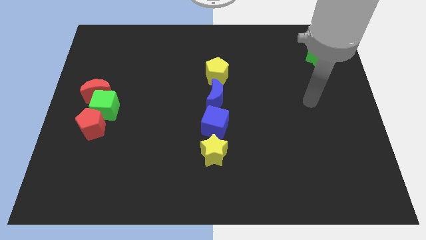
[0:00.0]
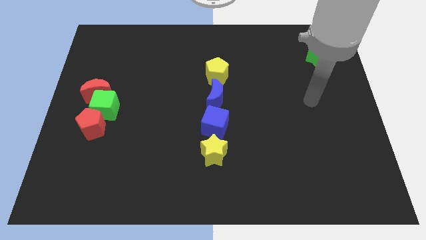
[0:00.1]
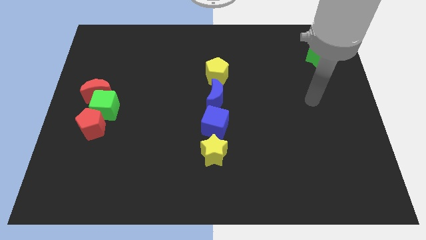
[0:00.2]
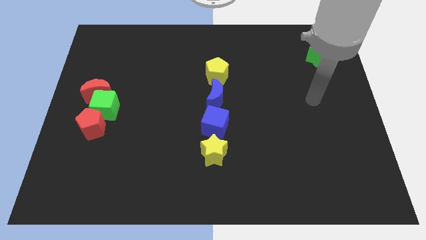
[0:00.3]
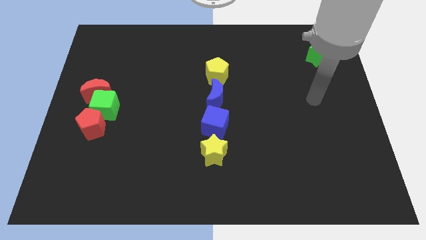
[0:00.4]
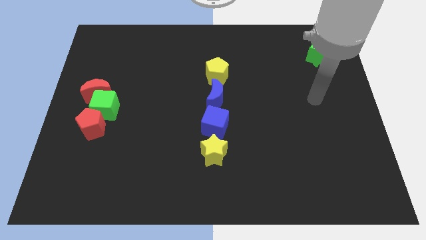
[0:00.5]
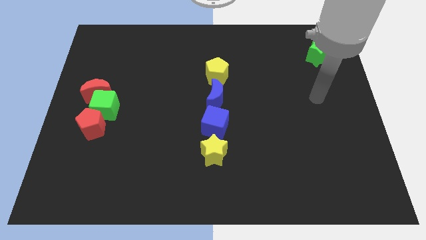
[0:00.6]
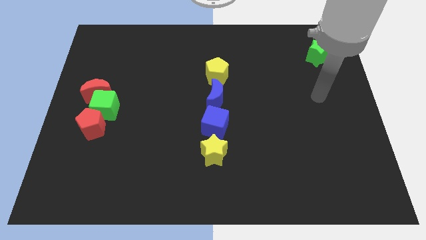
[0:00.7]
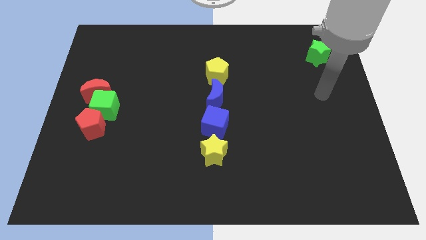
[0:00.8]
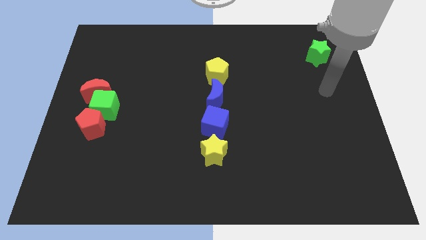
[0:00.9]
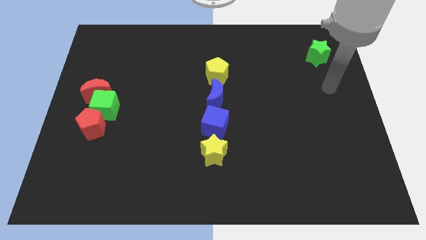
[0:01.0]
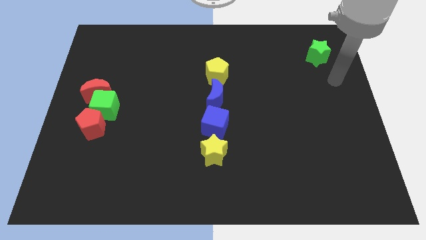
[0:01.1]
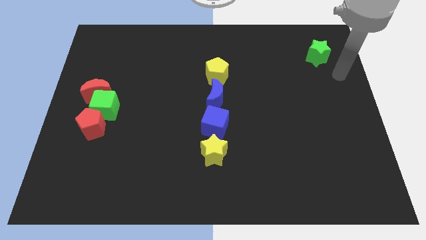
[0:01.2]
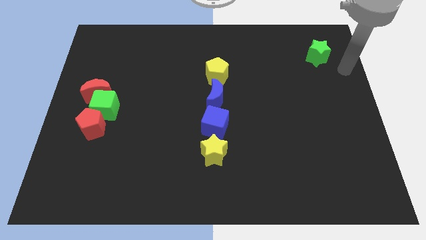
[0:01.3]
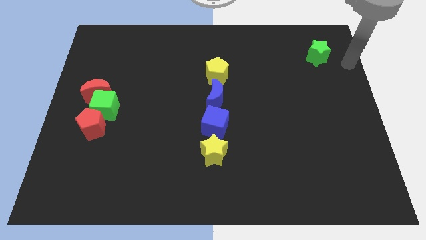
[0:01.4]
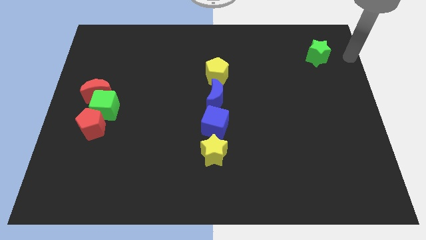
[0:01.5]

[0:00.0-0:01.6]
point your arm at the right of the green star

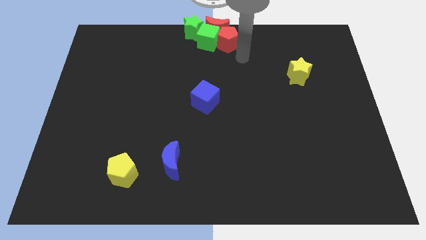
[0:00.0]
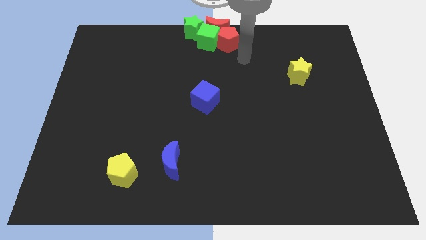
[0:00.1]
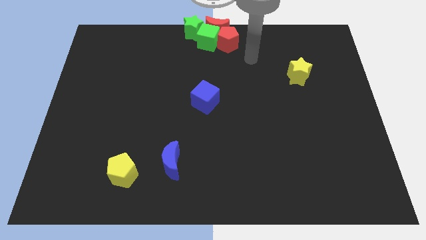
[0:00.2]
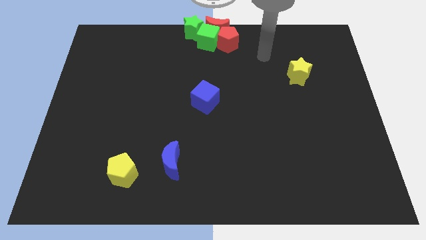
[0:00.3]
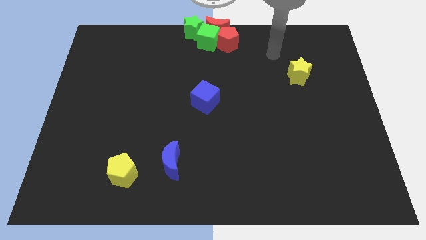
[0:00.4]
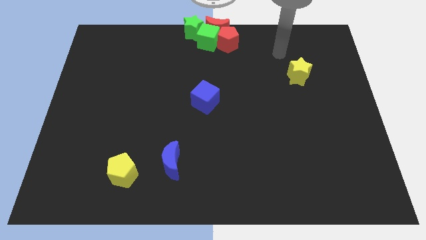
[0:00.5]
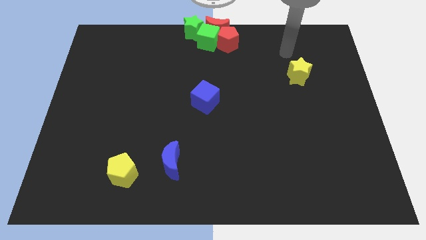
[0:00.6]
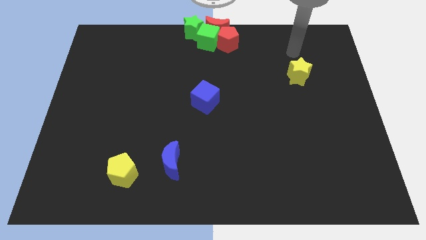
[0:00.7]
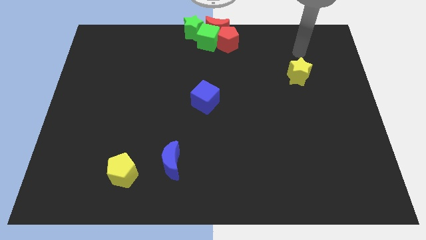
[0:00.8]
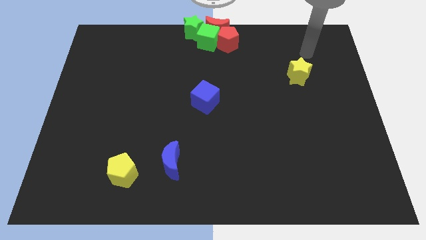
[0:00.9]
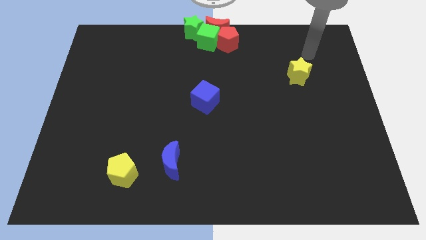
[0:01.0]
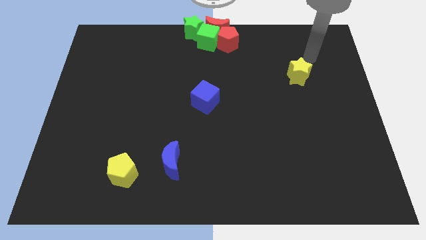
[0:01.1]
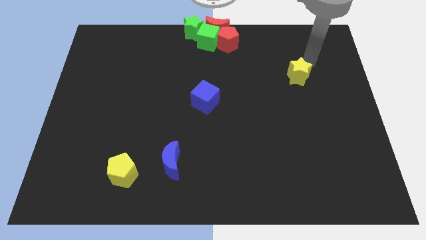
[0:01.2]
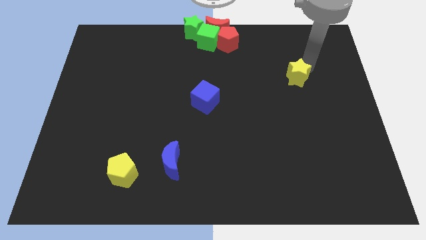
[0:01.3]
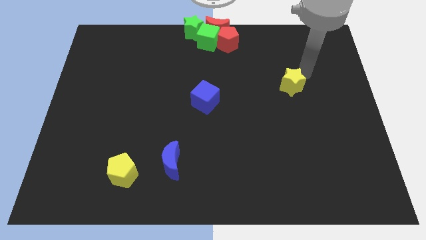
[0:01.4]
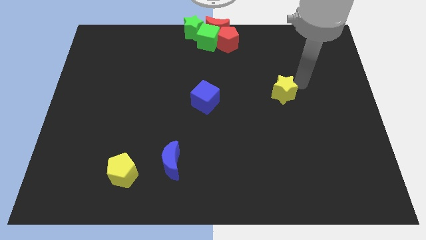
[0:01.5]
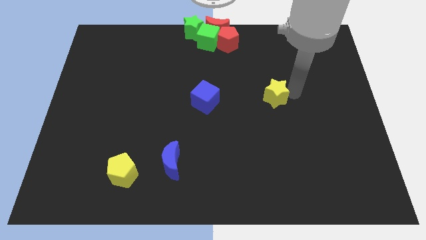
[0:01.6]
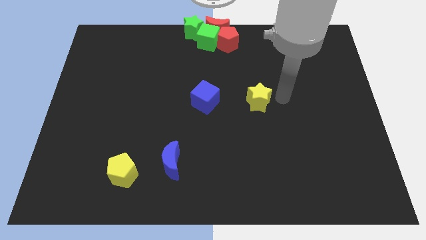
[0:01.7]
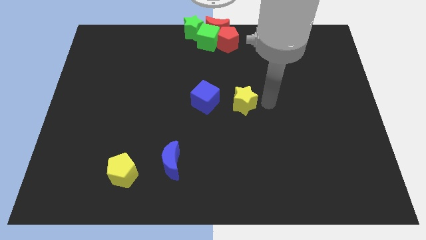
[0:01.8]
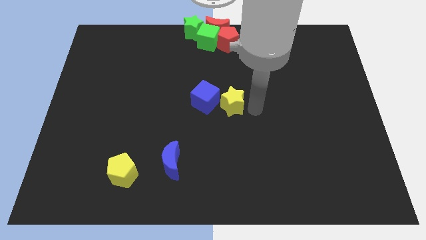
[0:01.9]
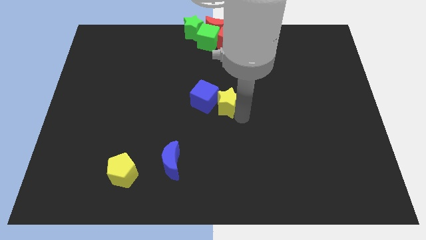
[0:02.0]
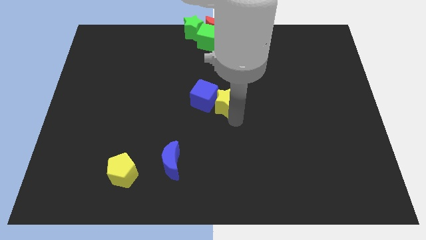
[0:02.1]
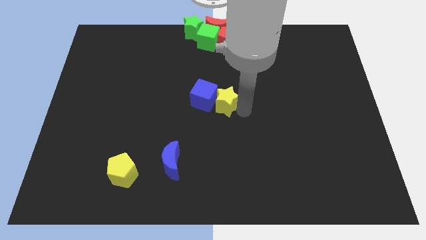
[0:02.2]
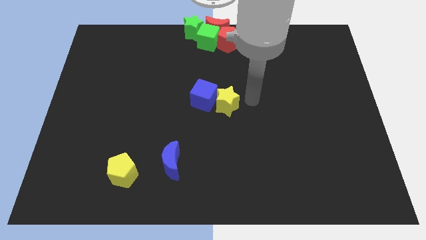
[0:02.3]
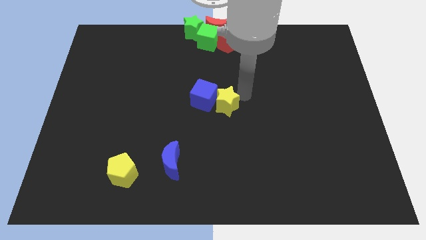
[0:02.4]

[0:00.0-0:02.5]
place yellow star to the center of the board

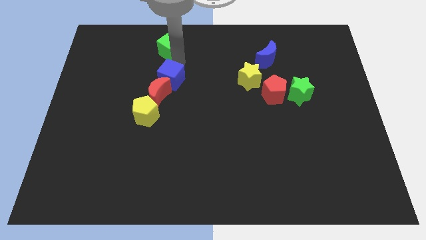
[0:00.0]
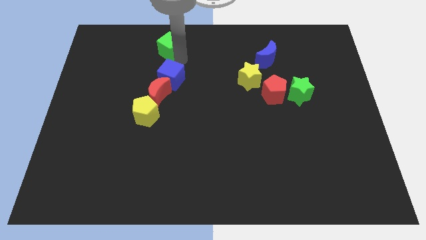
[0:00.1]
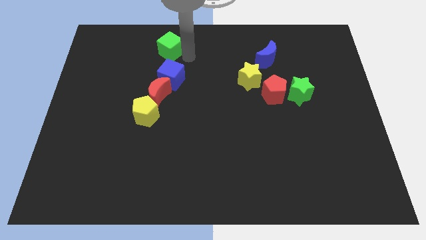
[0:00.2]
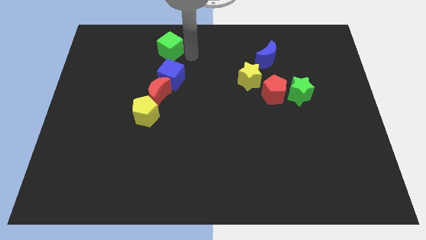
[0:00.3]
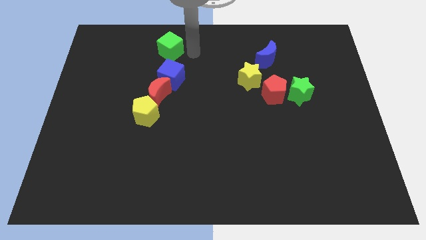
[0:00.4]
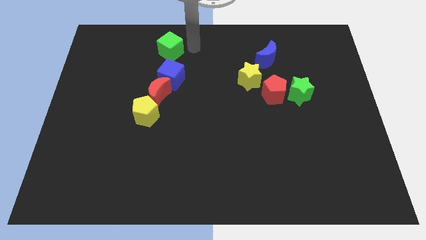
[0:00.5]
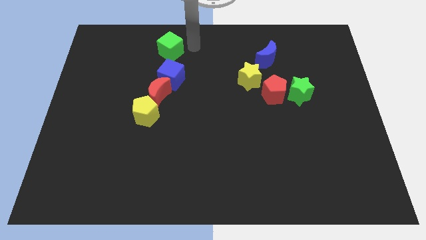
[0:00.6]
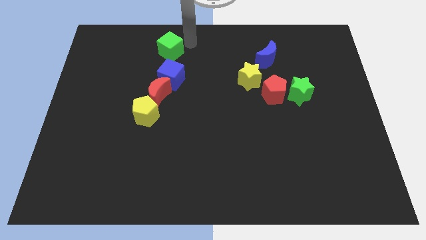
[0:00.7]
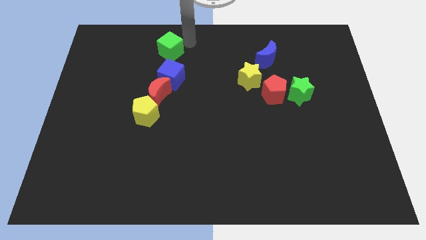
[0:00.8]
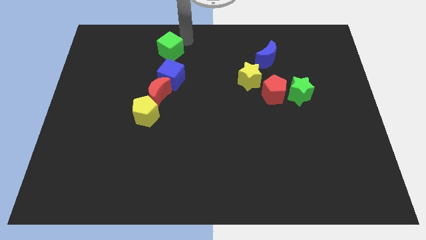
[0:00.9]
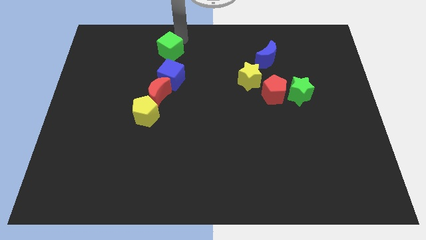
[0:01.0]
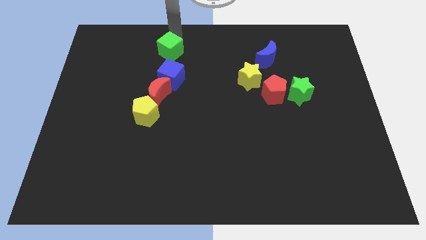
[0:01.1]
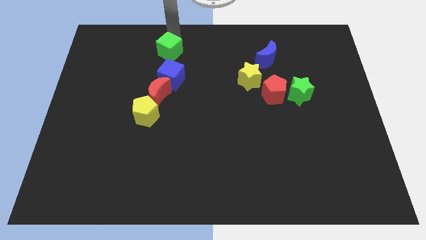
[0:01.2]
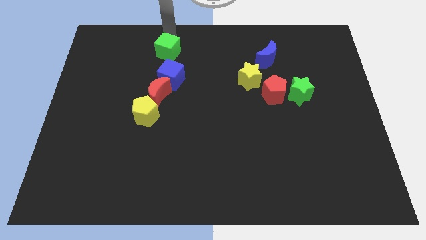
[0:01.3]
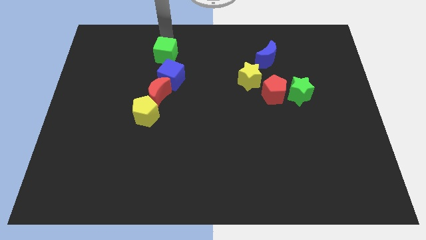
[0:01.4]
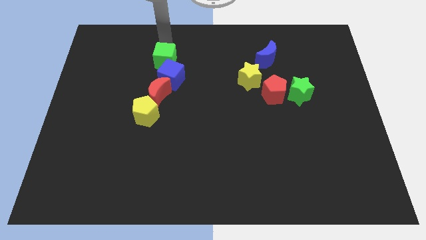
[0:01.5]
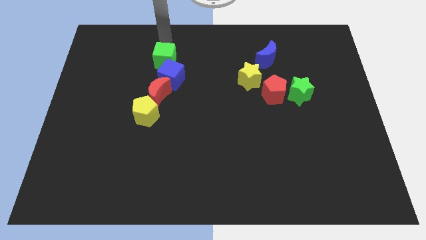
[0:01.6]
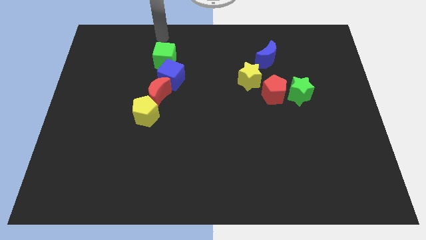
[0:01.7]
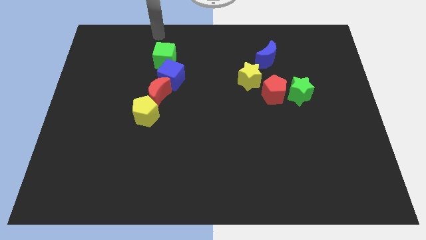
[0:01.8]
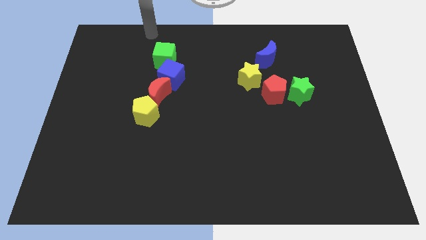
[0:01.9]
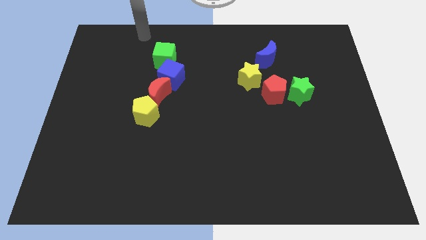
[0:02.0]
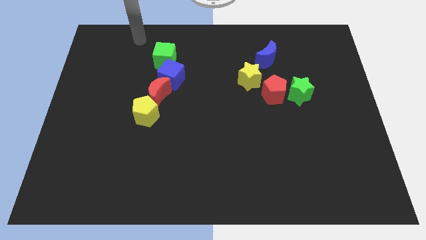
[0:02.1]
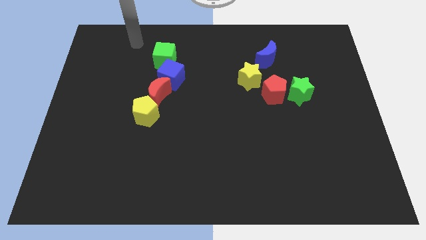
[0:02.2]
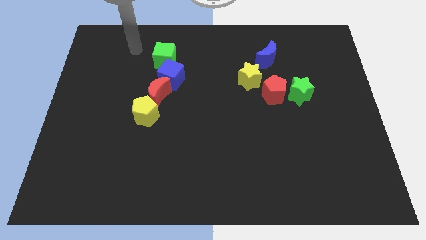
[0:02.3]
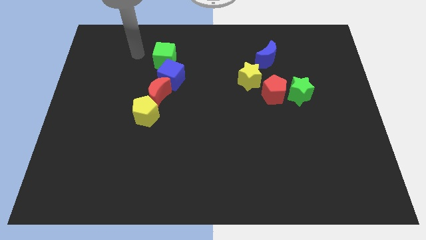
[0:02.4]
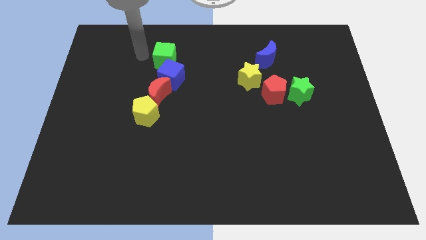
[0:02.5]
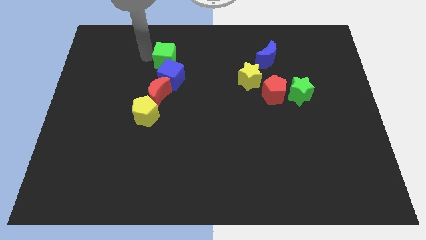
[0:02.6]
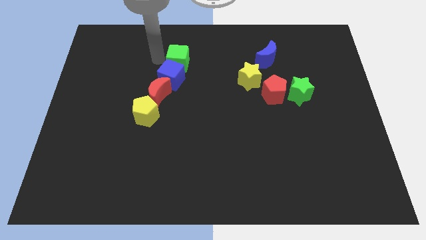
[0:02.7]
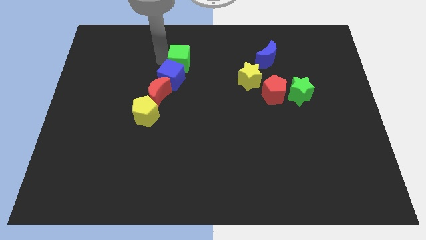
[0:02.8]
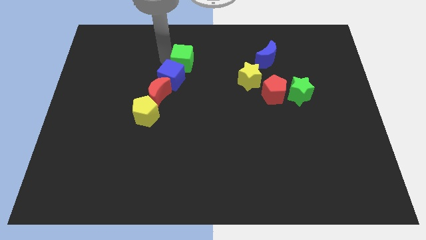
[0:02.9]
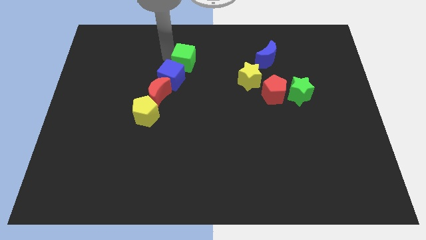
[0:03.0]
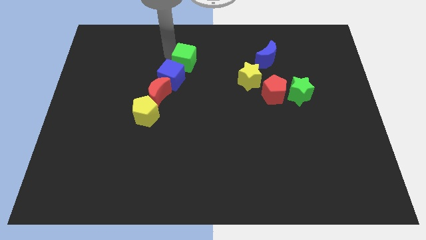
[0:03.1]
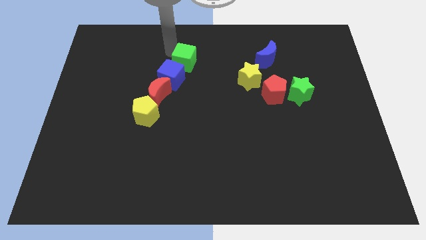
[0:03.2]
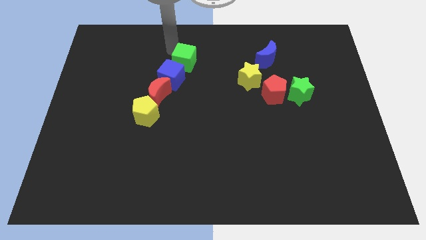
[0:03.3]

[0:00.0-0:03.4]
move the green cube to the top right to the blue cube

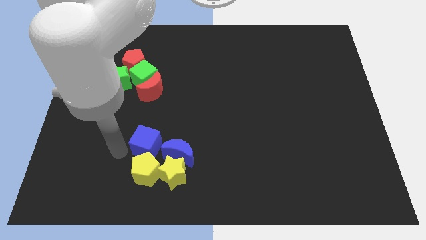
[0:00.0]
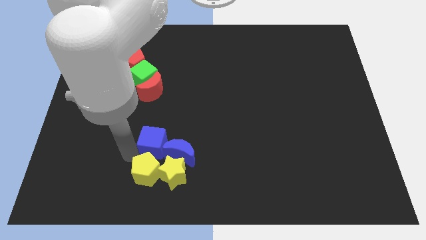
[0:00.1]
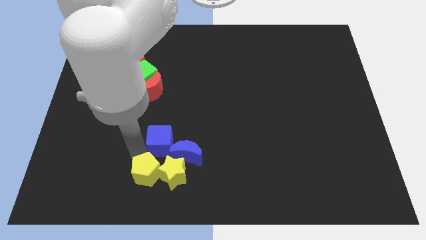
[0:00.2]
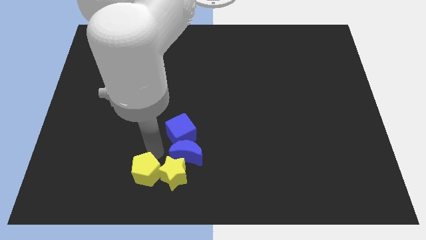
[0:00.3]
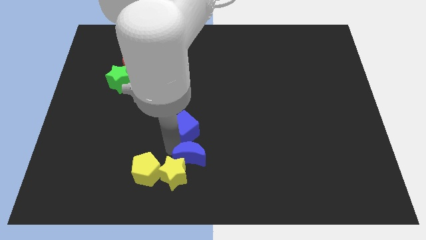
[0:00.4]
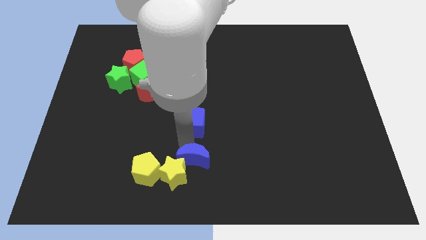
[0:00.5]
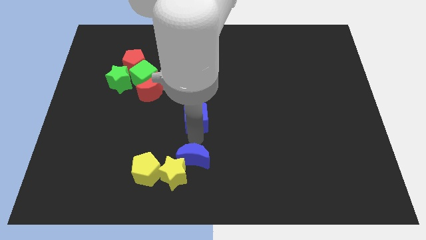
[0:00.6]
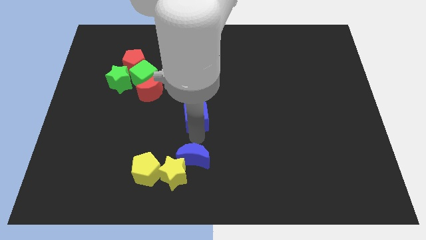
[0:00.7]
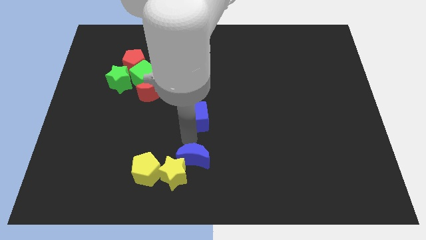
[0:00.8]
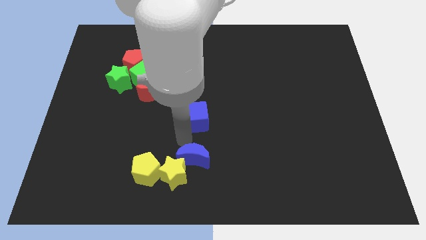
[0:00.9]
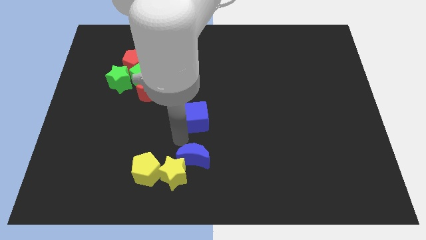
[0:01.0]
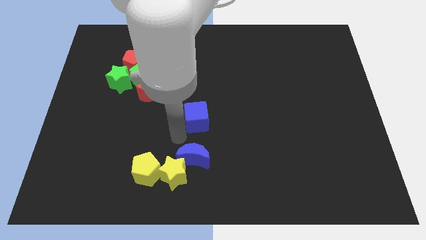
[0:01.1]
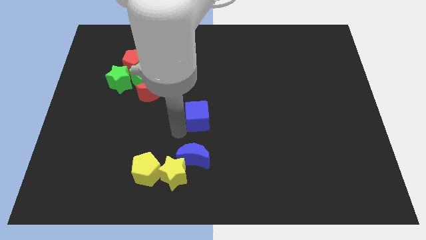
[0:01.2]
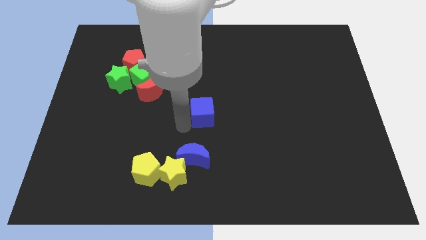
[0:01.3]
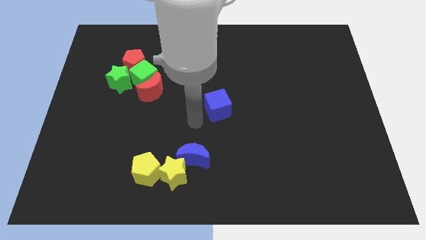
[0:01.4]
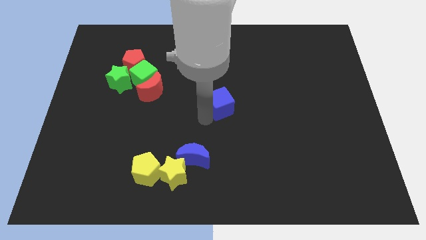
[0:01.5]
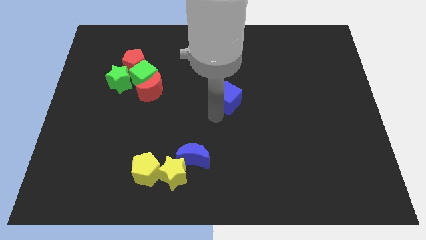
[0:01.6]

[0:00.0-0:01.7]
separate the blue cube away from the yellow pentagon
